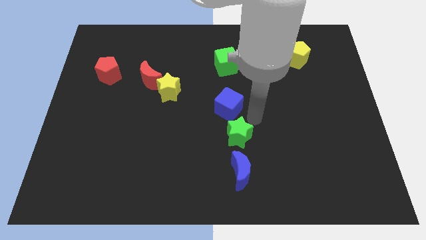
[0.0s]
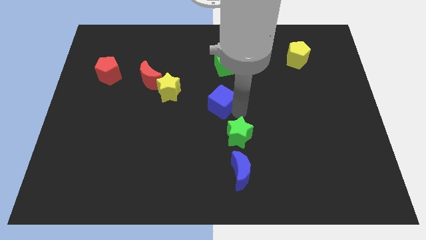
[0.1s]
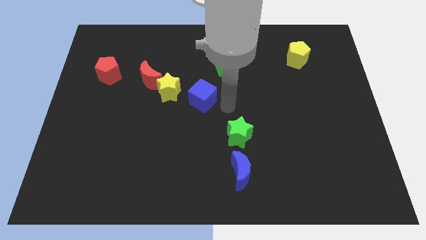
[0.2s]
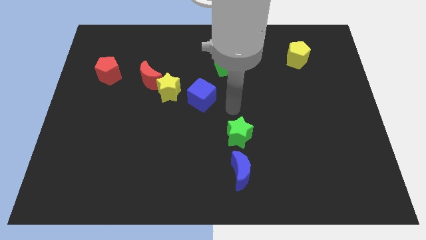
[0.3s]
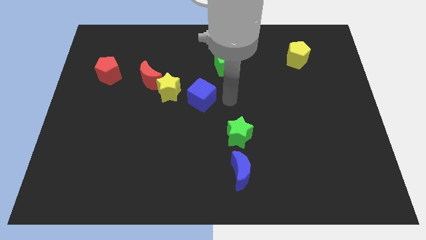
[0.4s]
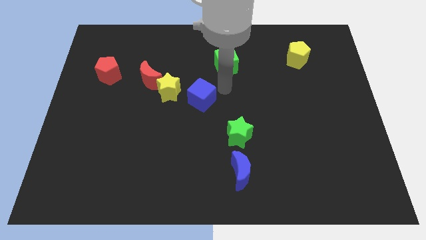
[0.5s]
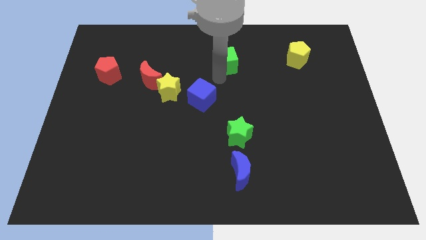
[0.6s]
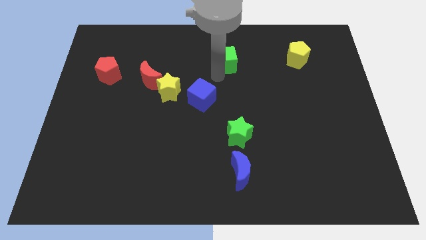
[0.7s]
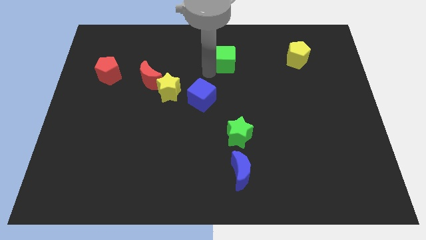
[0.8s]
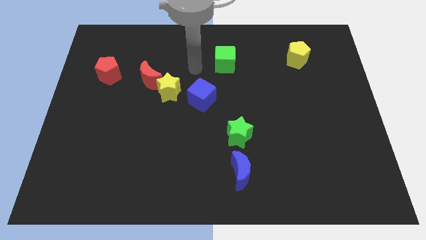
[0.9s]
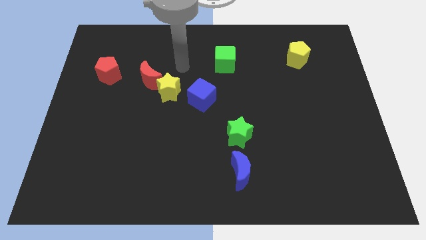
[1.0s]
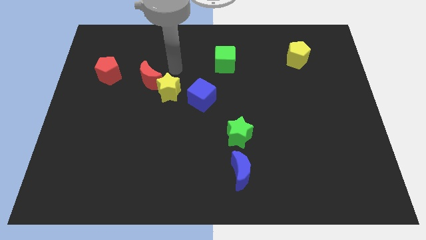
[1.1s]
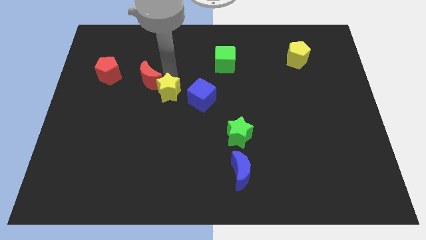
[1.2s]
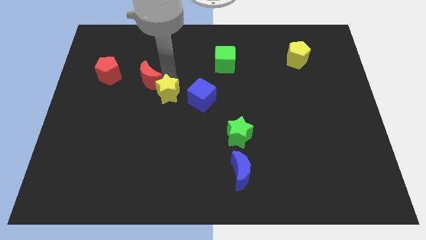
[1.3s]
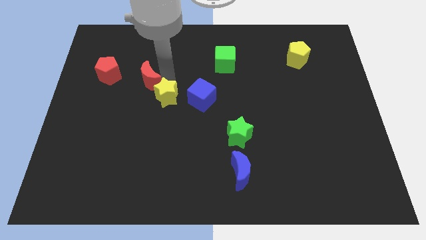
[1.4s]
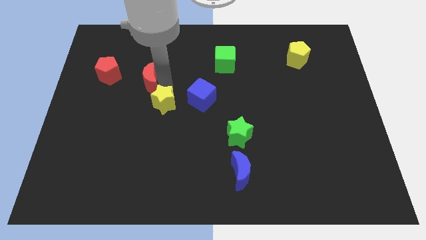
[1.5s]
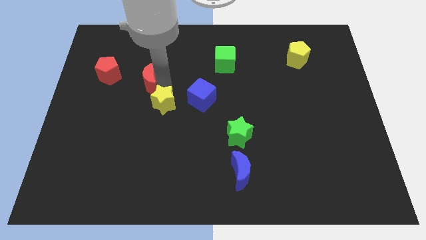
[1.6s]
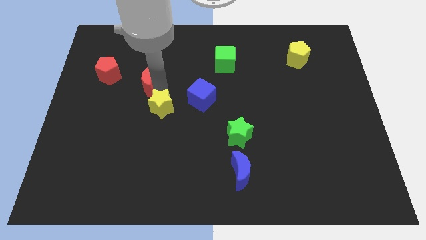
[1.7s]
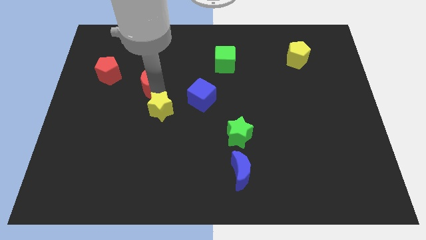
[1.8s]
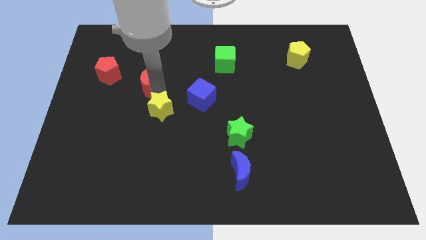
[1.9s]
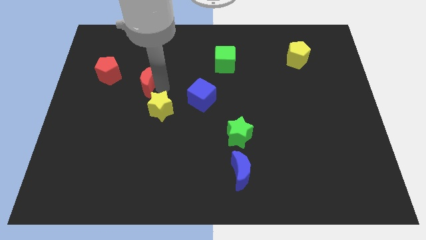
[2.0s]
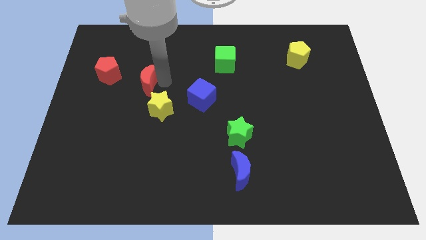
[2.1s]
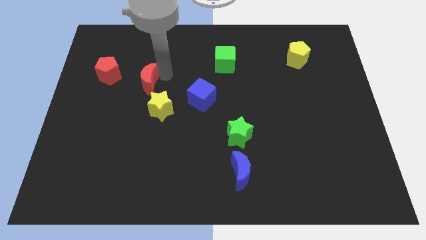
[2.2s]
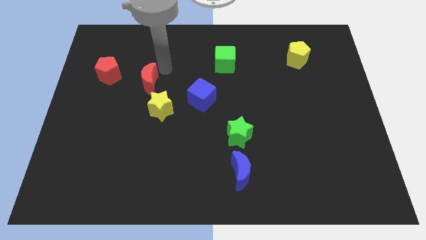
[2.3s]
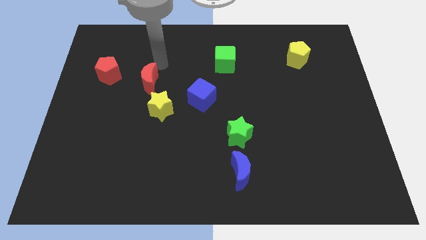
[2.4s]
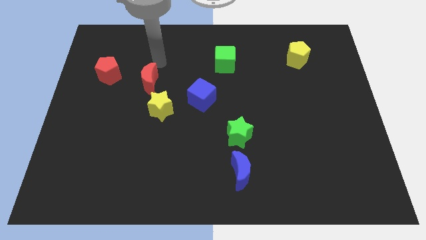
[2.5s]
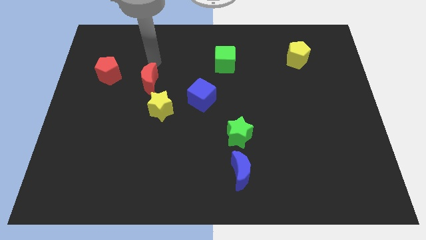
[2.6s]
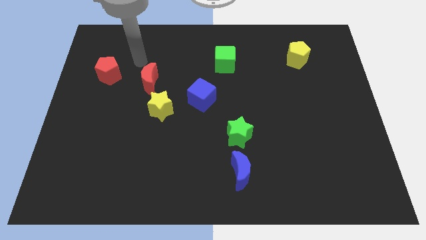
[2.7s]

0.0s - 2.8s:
slightly push the yellow star downward

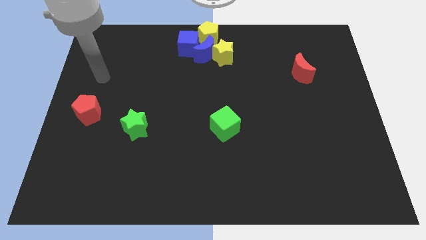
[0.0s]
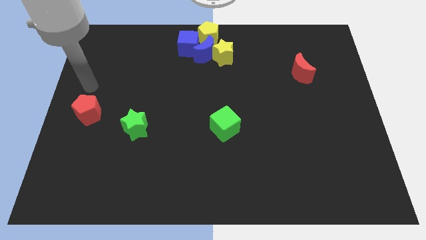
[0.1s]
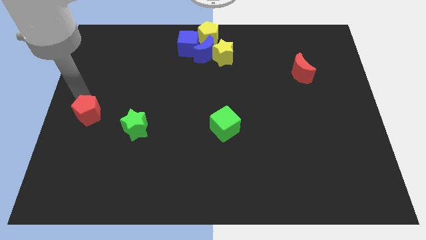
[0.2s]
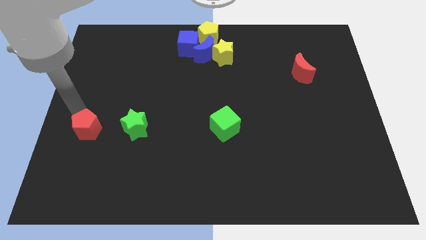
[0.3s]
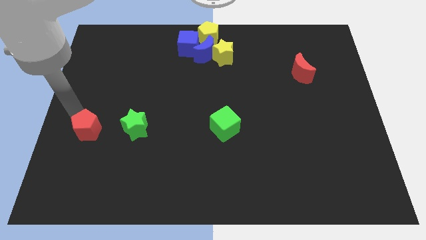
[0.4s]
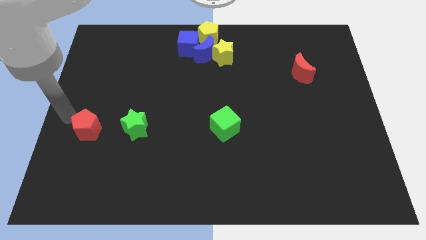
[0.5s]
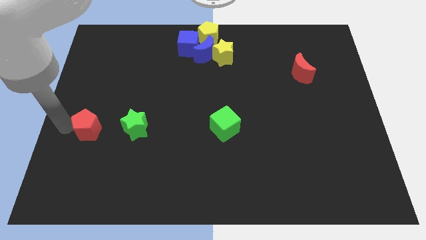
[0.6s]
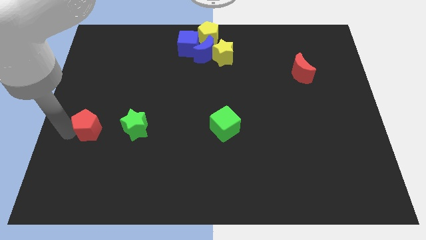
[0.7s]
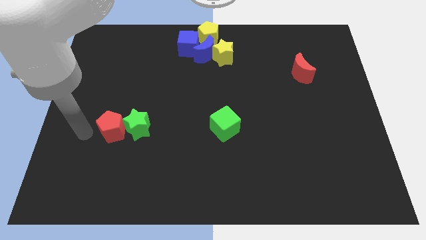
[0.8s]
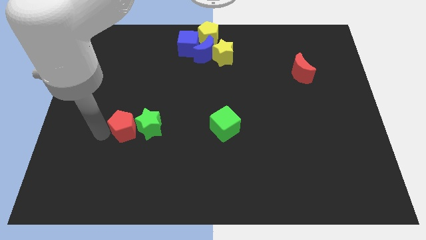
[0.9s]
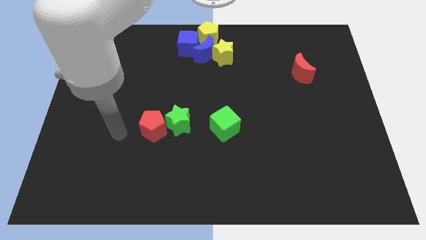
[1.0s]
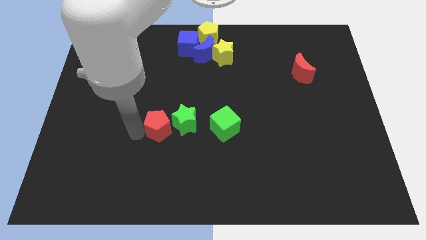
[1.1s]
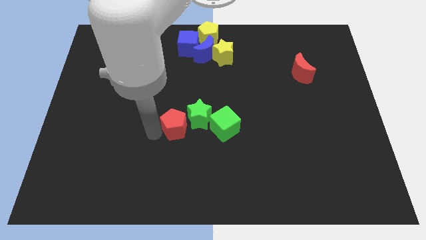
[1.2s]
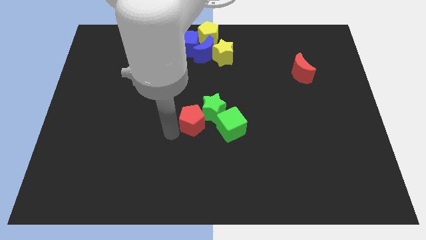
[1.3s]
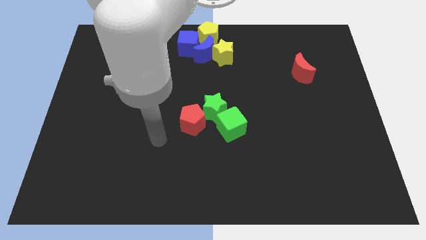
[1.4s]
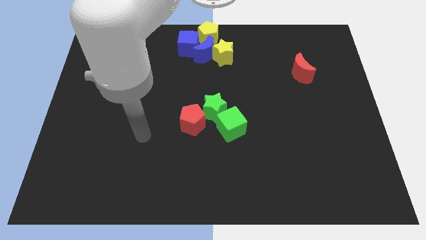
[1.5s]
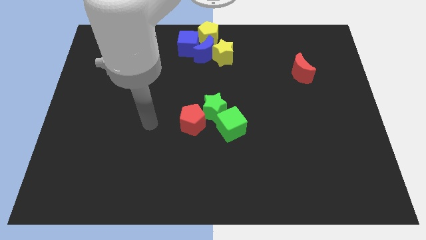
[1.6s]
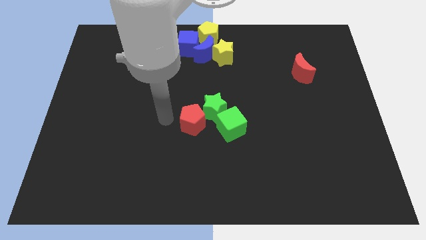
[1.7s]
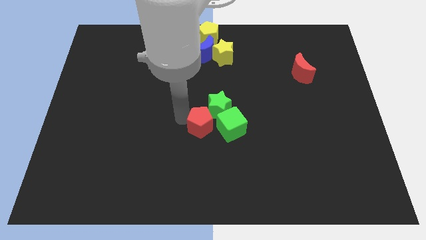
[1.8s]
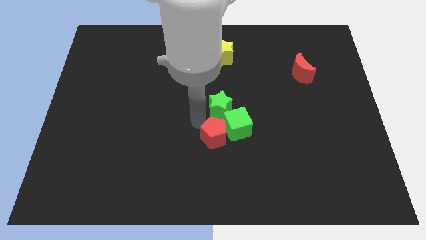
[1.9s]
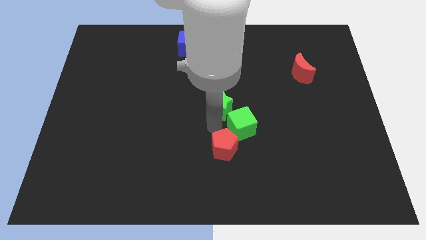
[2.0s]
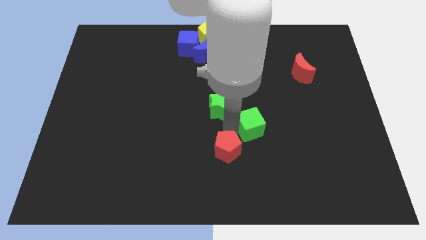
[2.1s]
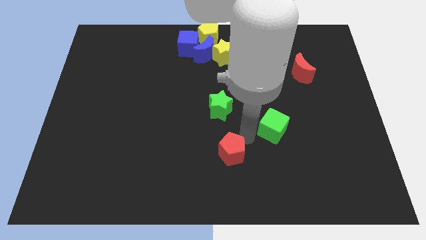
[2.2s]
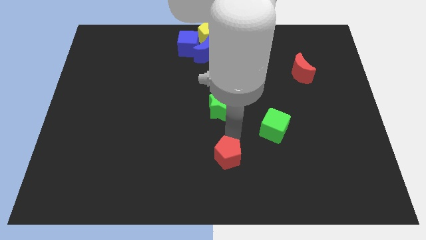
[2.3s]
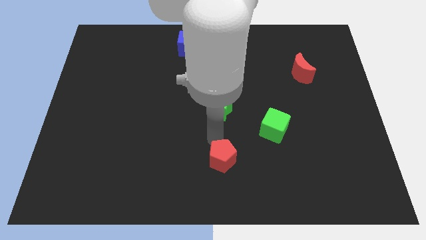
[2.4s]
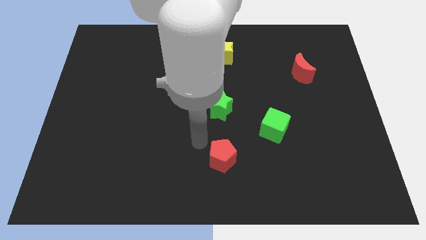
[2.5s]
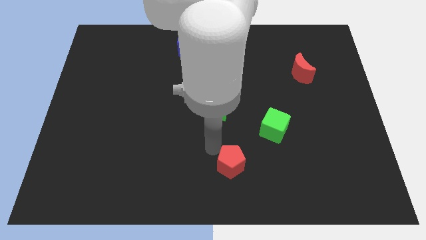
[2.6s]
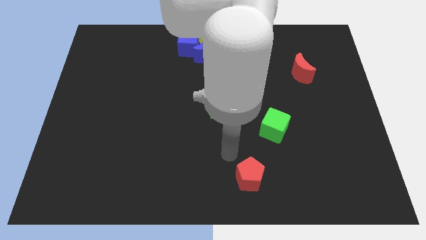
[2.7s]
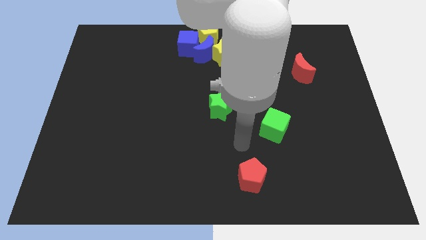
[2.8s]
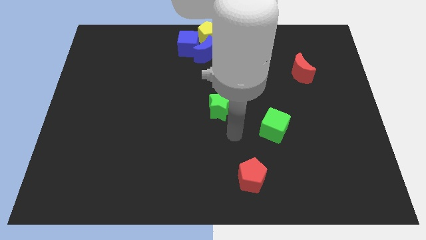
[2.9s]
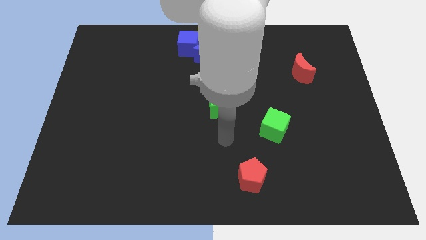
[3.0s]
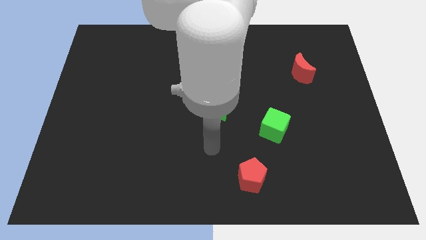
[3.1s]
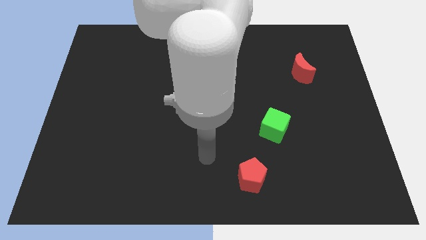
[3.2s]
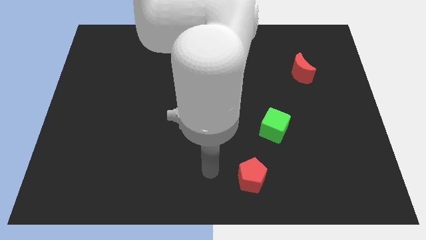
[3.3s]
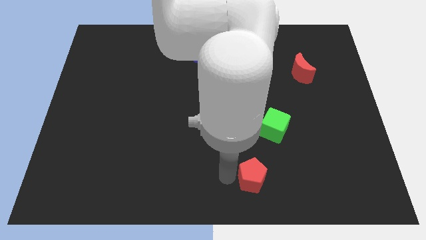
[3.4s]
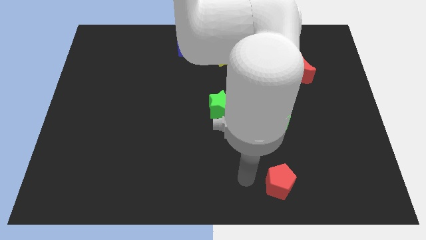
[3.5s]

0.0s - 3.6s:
make a triangle out of both green blocks and red pentagon

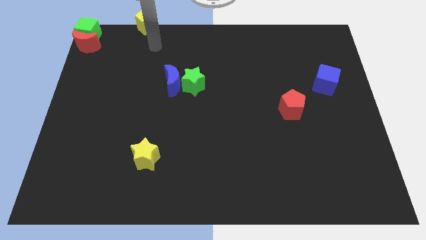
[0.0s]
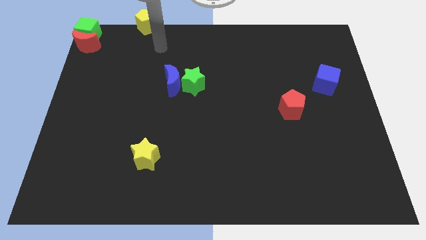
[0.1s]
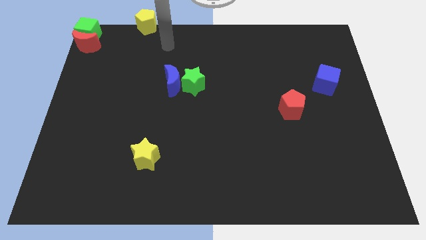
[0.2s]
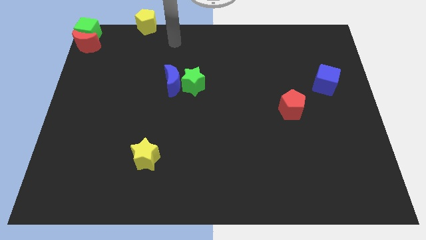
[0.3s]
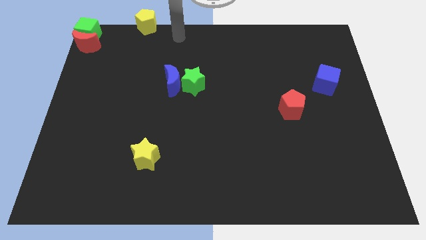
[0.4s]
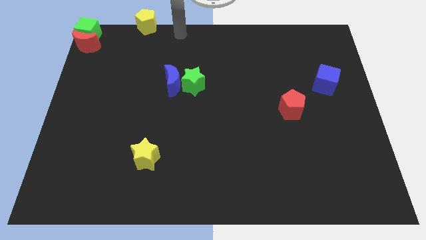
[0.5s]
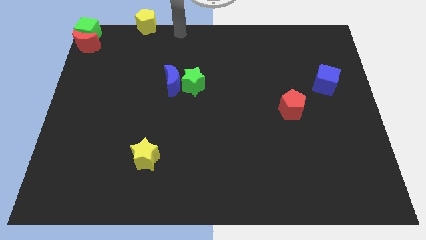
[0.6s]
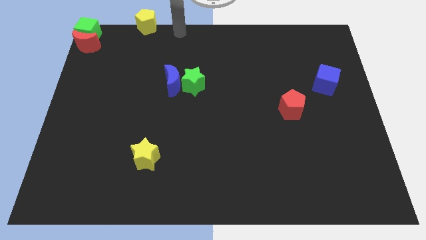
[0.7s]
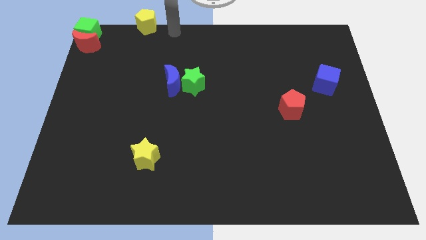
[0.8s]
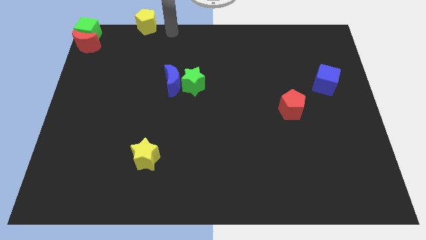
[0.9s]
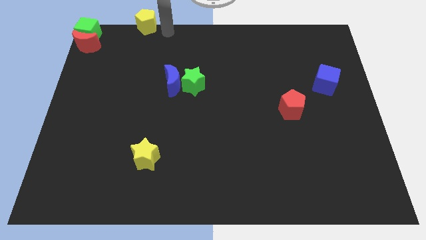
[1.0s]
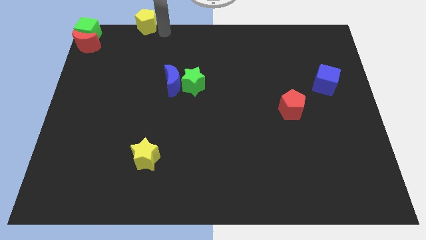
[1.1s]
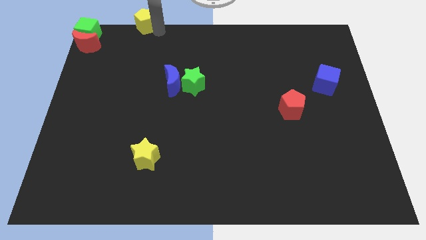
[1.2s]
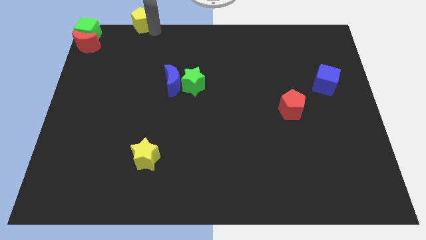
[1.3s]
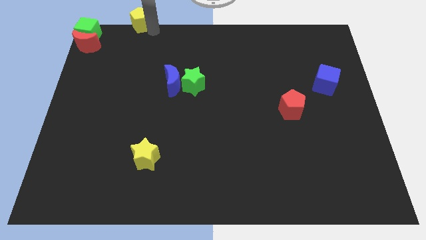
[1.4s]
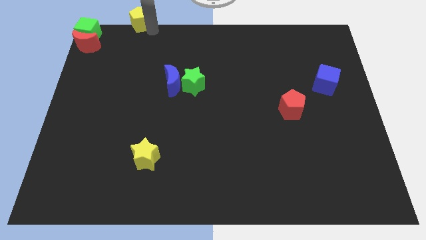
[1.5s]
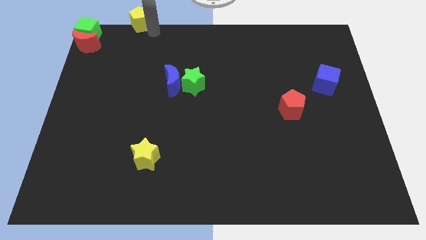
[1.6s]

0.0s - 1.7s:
adjust the yellow pentagon

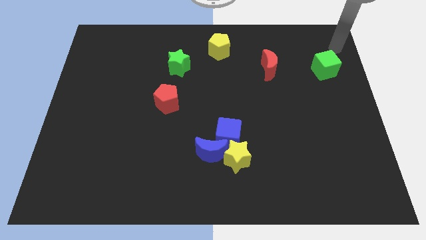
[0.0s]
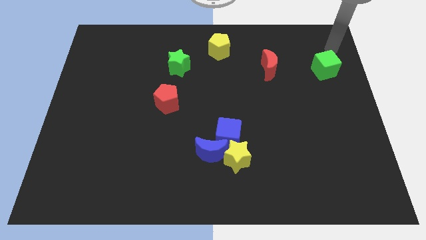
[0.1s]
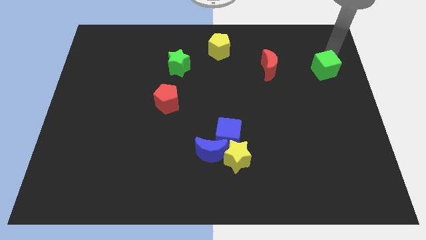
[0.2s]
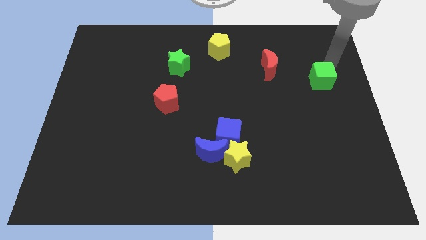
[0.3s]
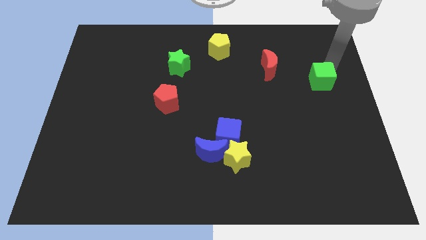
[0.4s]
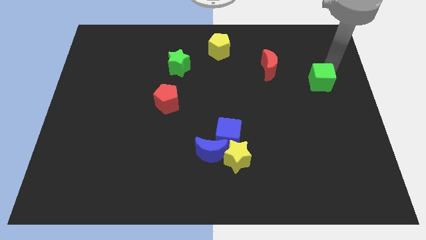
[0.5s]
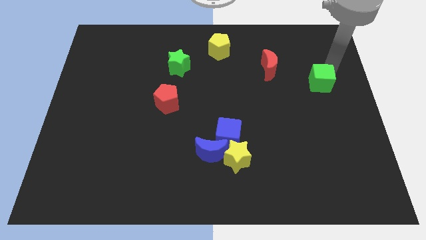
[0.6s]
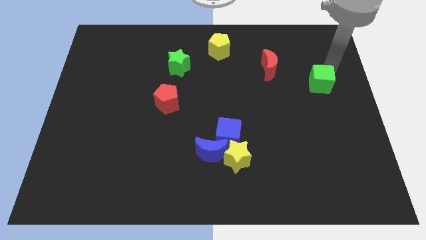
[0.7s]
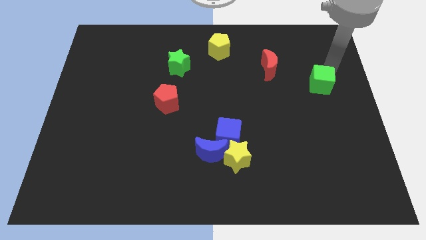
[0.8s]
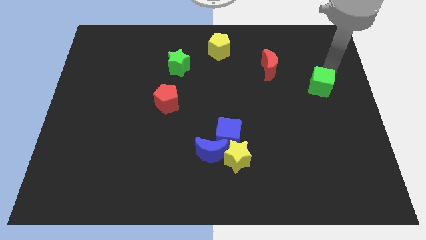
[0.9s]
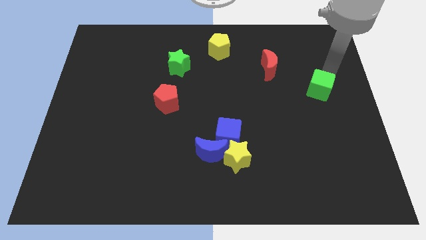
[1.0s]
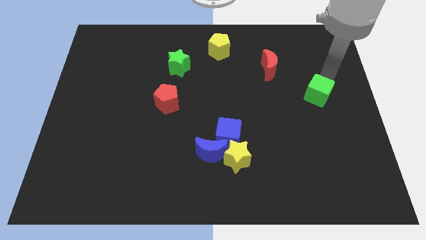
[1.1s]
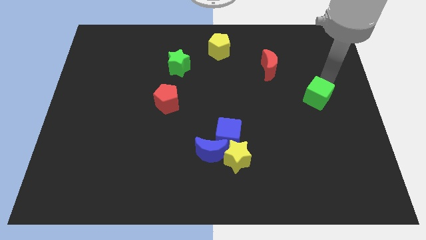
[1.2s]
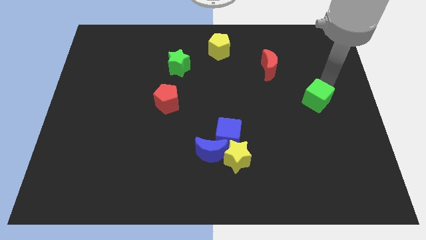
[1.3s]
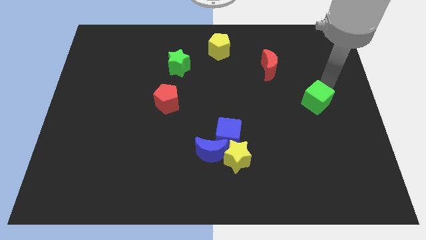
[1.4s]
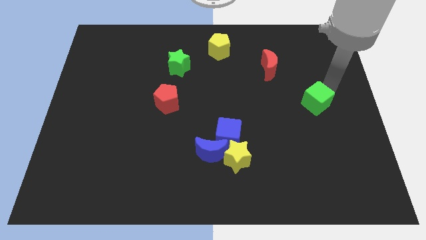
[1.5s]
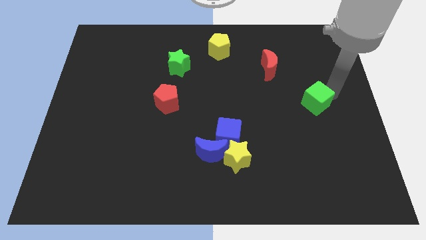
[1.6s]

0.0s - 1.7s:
push the green cube to the bottom right of the red crescent
